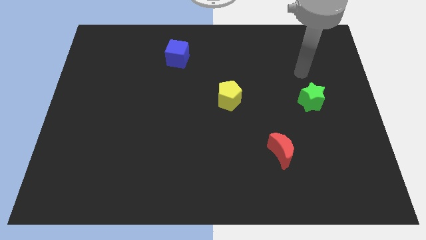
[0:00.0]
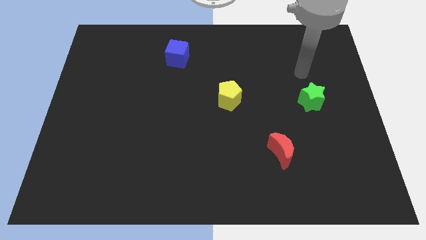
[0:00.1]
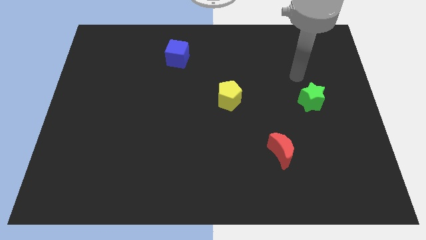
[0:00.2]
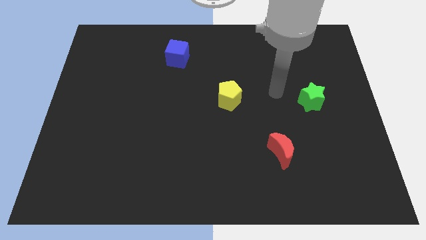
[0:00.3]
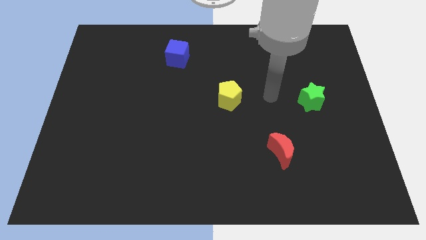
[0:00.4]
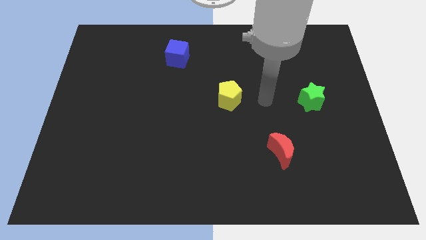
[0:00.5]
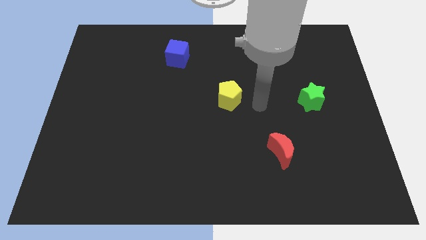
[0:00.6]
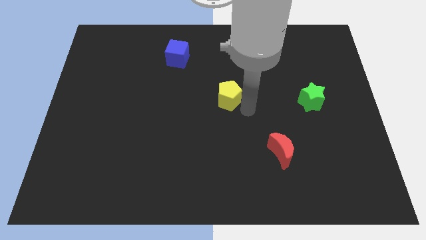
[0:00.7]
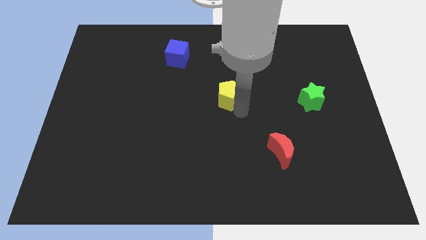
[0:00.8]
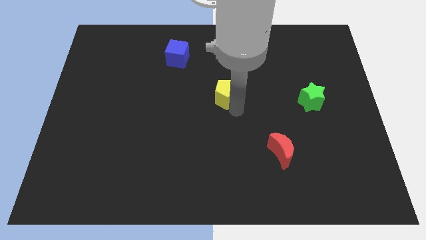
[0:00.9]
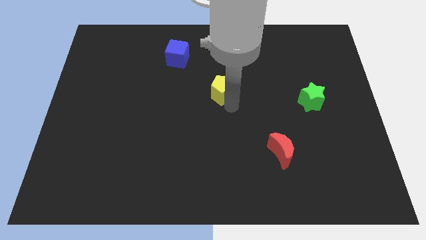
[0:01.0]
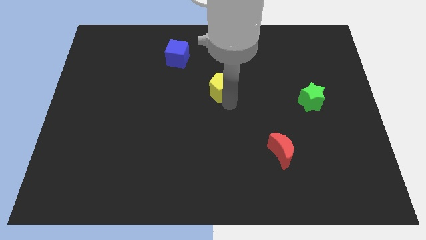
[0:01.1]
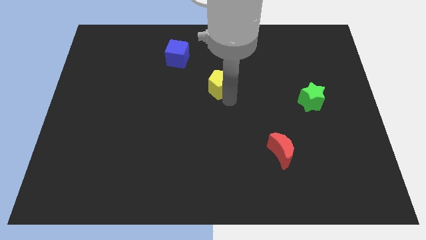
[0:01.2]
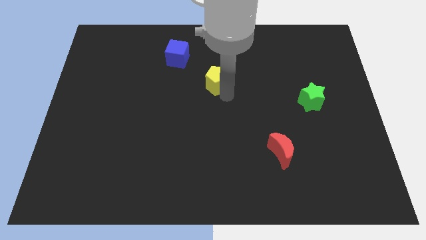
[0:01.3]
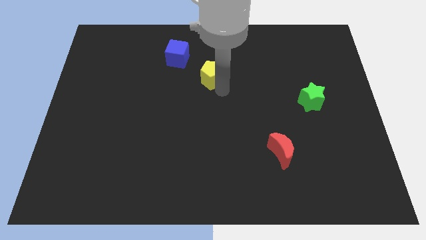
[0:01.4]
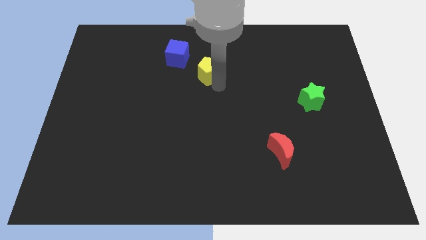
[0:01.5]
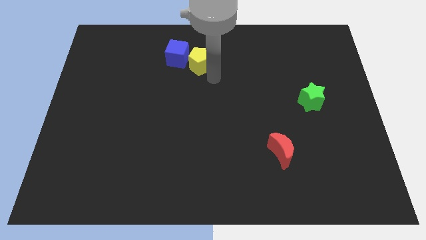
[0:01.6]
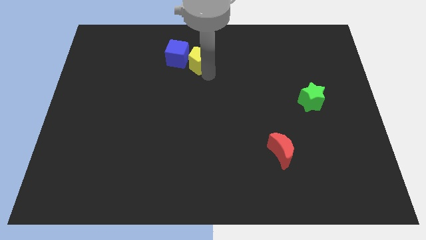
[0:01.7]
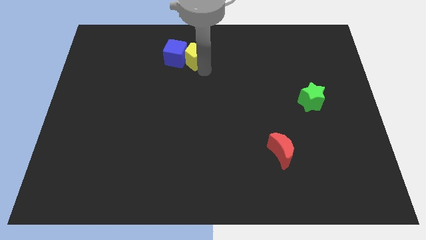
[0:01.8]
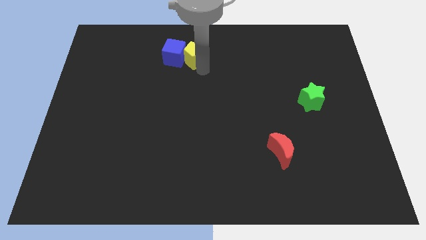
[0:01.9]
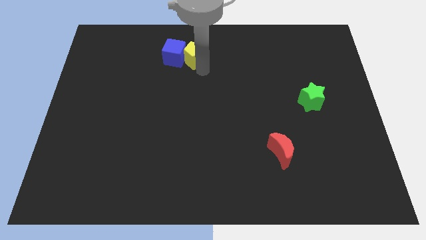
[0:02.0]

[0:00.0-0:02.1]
push the yellow pentagon towards the cube

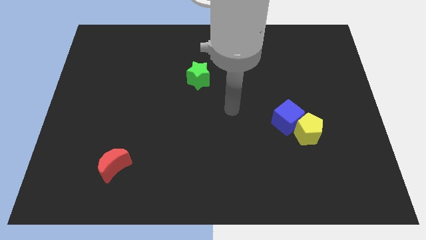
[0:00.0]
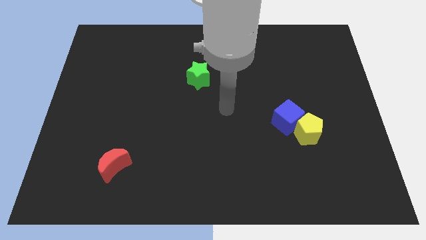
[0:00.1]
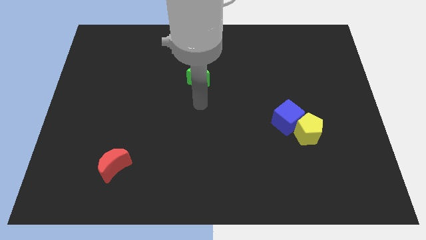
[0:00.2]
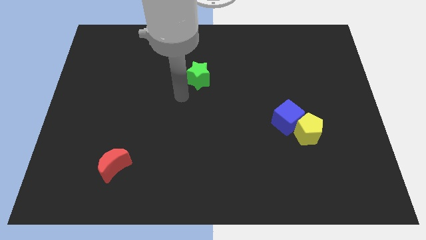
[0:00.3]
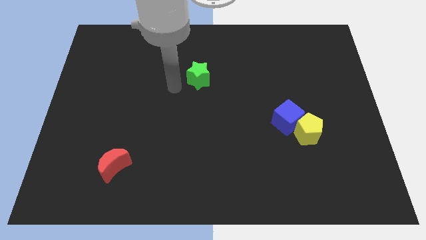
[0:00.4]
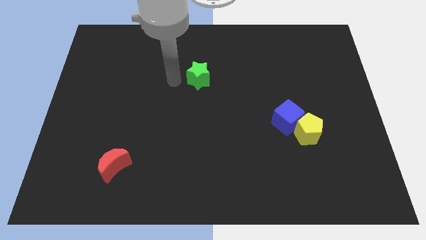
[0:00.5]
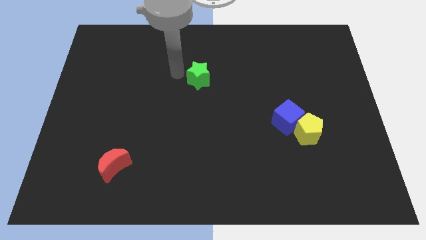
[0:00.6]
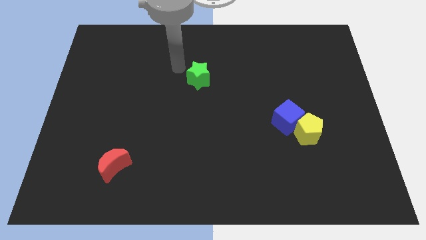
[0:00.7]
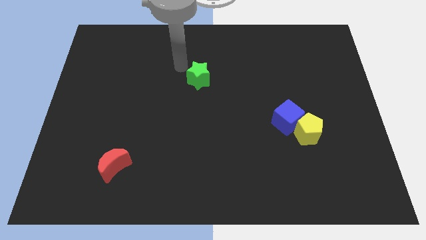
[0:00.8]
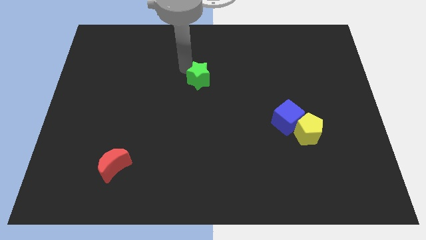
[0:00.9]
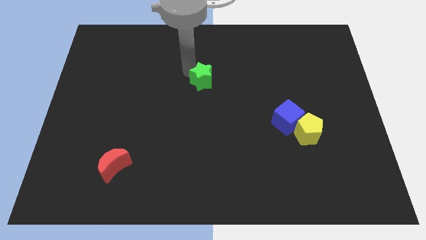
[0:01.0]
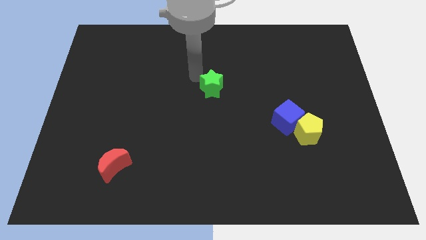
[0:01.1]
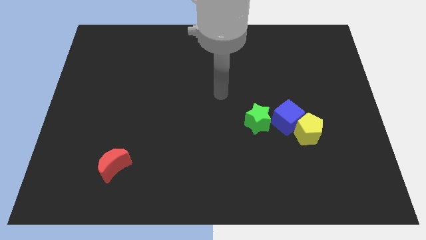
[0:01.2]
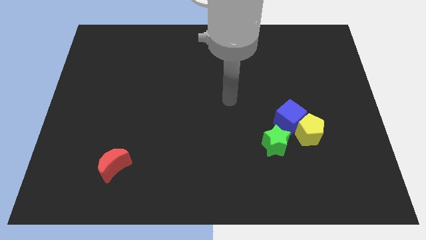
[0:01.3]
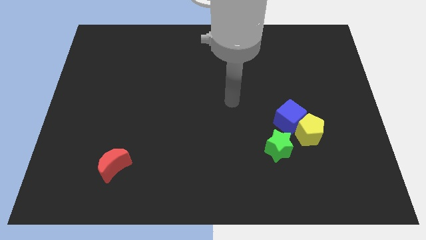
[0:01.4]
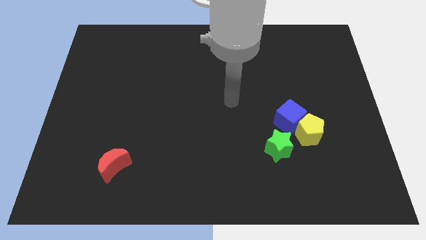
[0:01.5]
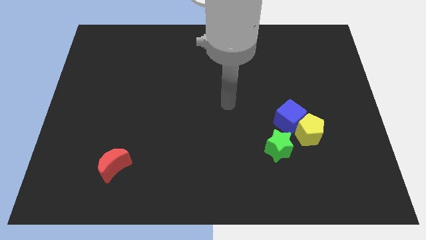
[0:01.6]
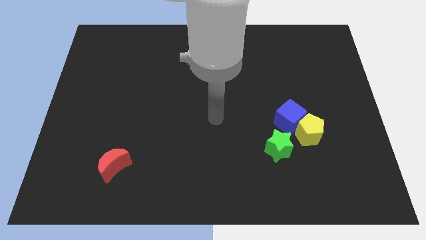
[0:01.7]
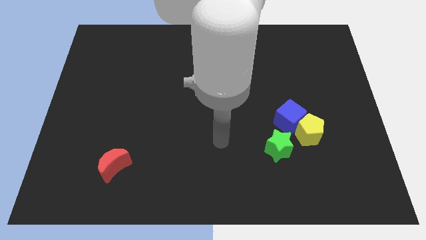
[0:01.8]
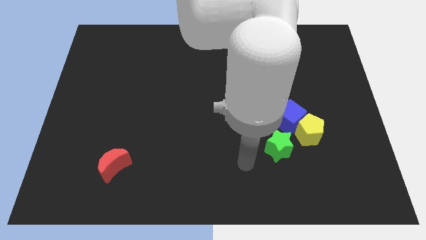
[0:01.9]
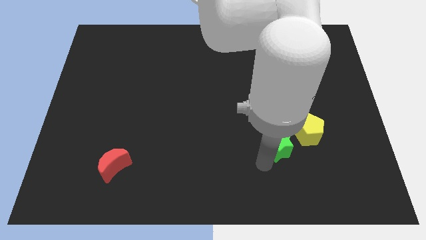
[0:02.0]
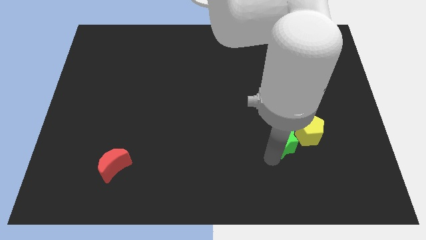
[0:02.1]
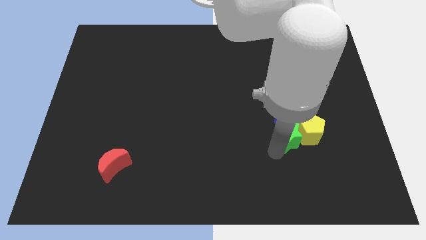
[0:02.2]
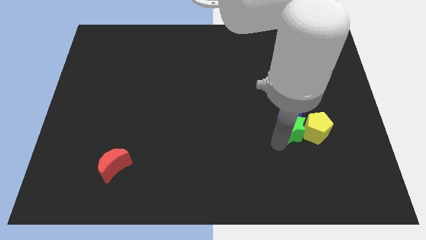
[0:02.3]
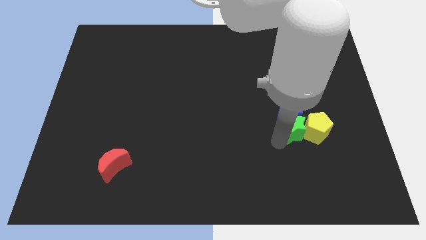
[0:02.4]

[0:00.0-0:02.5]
put the green star to the yellow pentagon

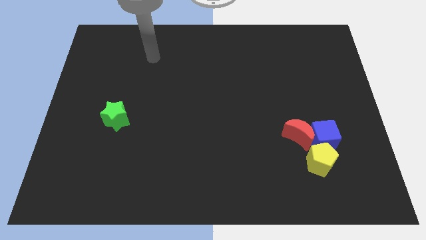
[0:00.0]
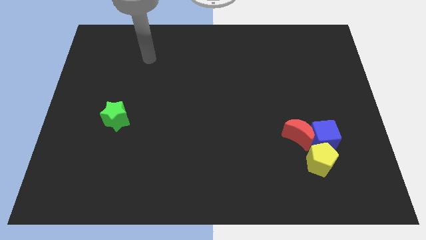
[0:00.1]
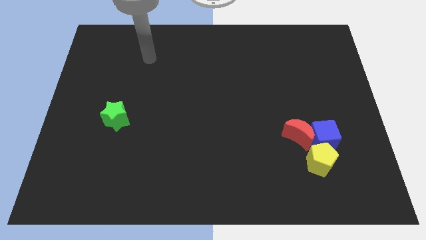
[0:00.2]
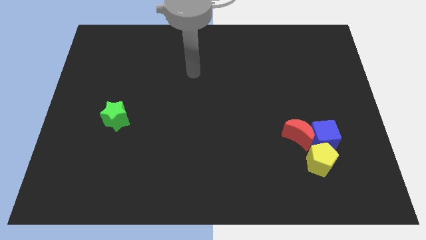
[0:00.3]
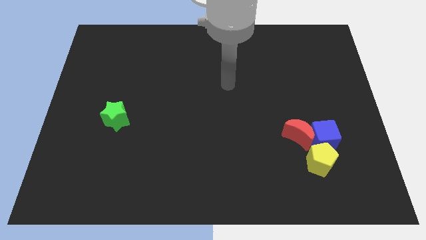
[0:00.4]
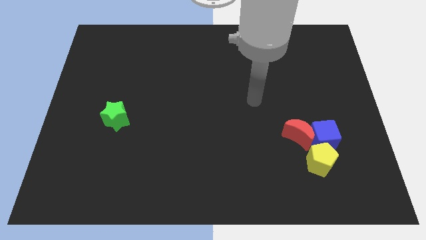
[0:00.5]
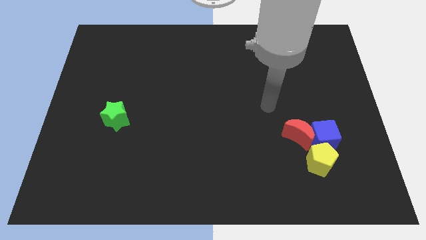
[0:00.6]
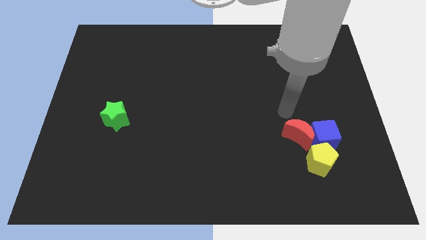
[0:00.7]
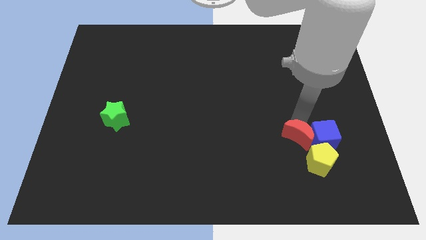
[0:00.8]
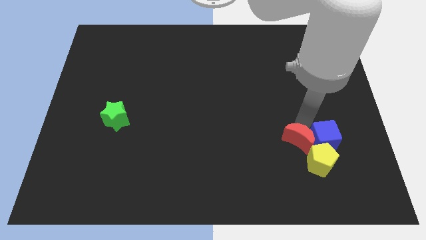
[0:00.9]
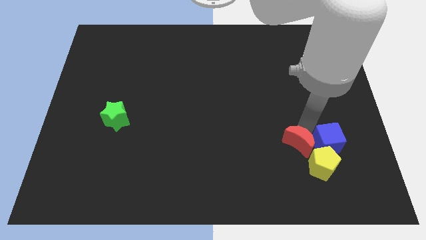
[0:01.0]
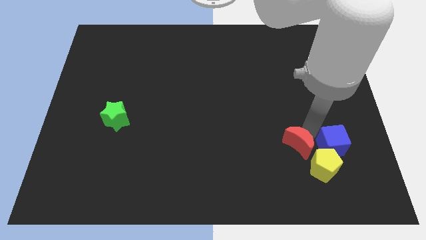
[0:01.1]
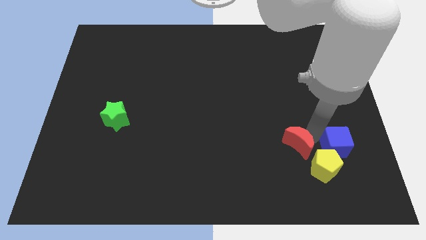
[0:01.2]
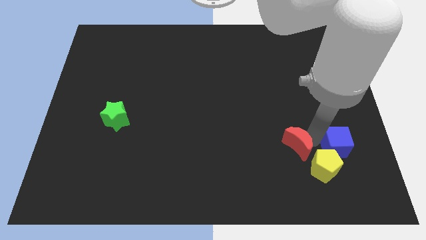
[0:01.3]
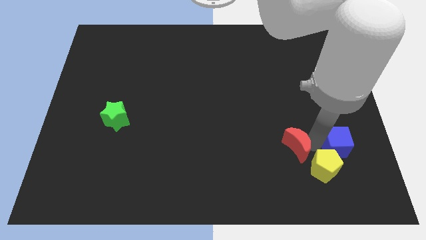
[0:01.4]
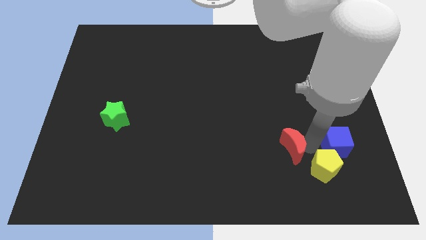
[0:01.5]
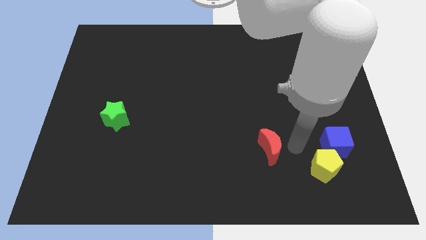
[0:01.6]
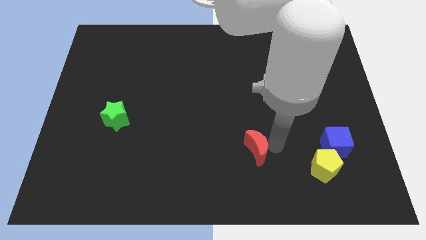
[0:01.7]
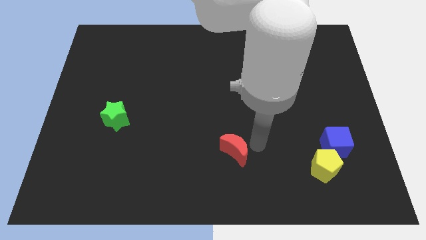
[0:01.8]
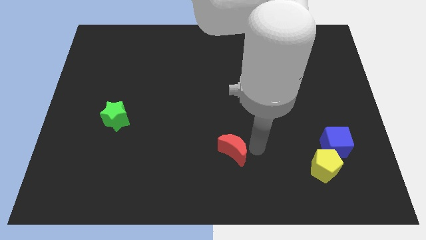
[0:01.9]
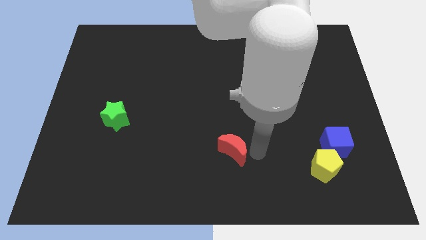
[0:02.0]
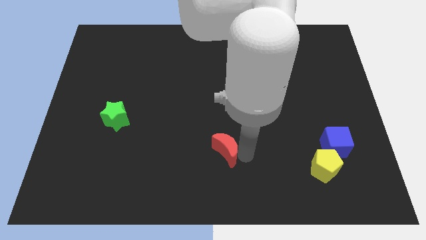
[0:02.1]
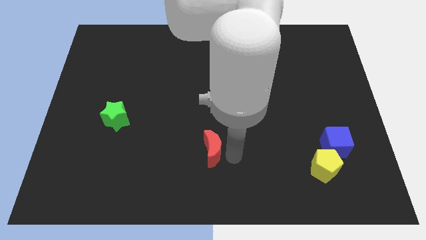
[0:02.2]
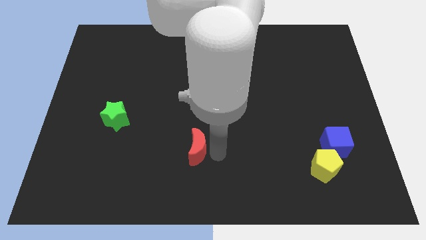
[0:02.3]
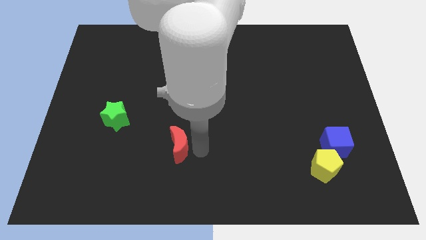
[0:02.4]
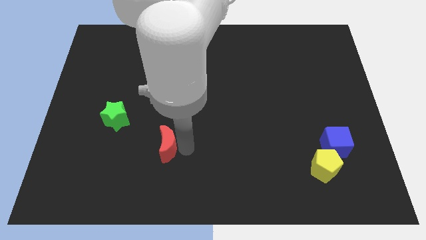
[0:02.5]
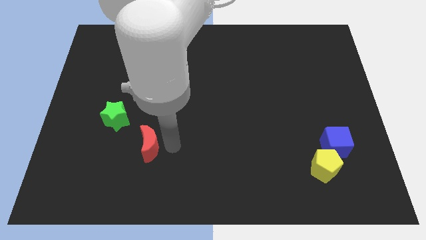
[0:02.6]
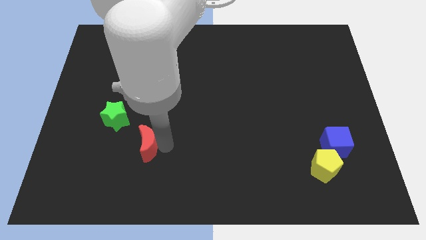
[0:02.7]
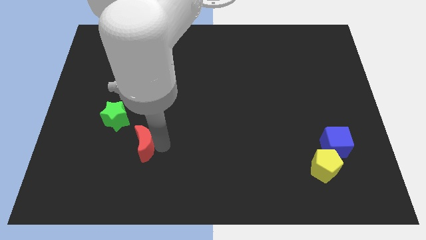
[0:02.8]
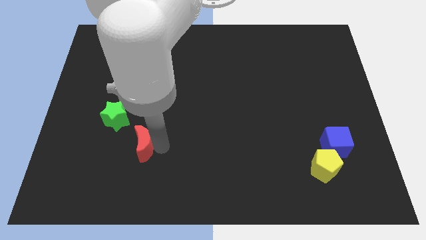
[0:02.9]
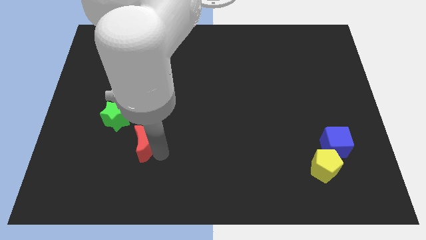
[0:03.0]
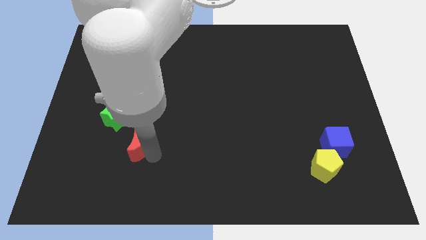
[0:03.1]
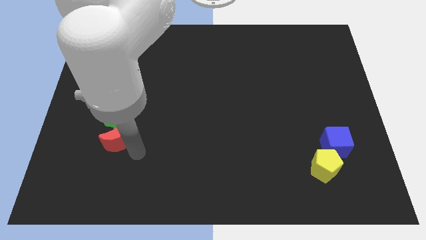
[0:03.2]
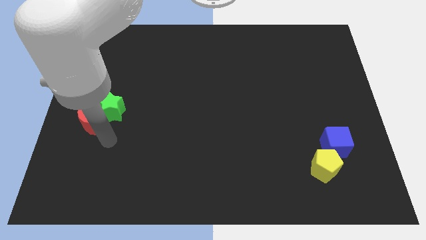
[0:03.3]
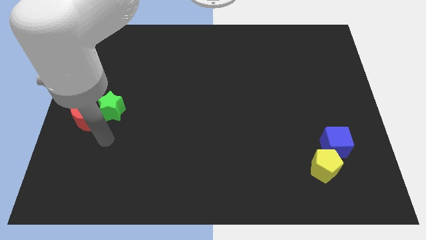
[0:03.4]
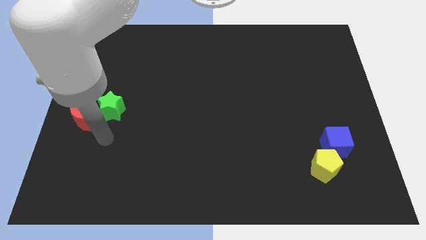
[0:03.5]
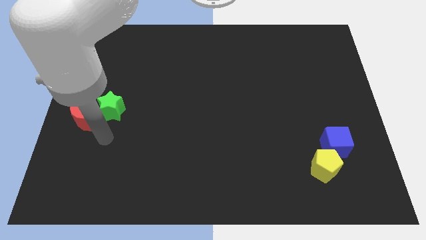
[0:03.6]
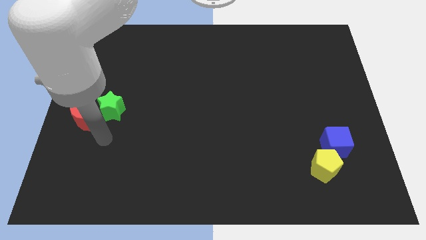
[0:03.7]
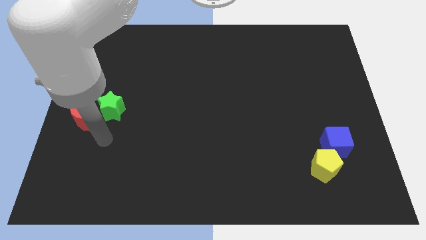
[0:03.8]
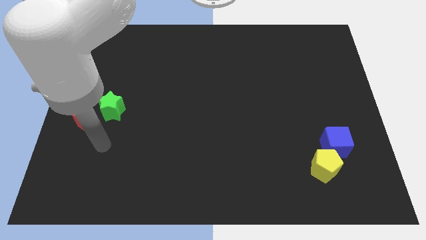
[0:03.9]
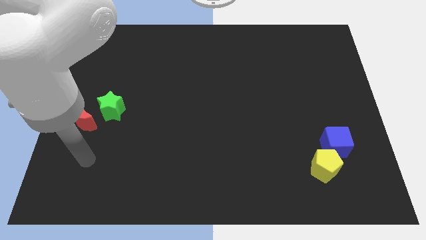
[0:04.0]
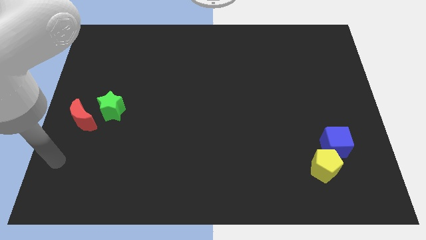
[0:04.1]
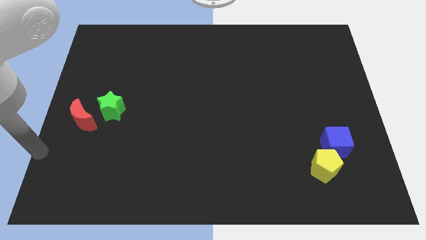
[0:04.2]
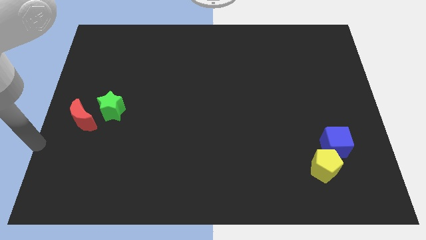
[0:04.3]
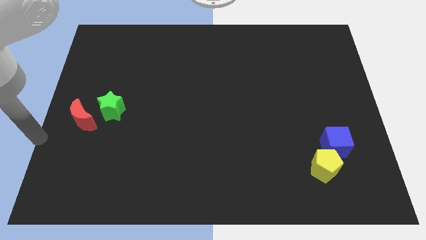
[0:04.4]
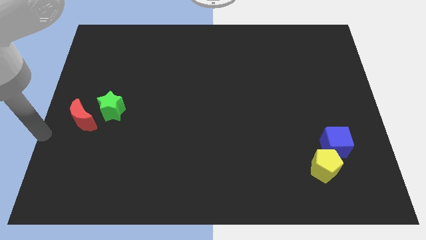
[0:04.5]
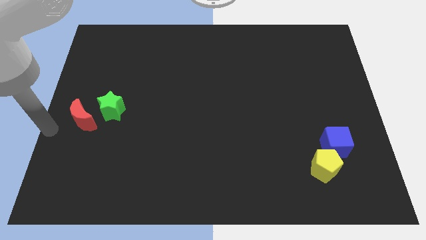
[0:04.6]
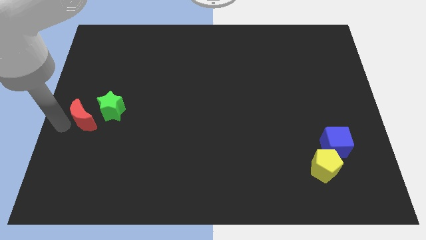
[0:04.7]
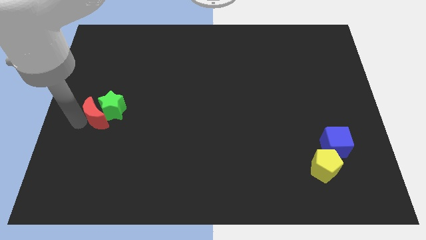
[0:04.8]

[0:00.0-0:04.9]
move the moon to the green block
